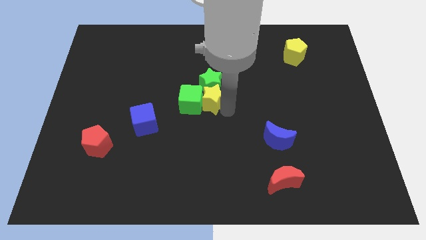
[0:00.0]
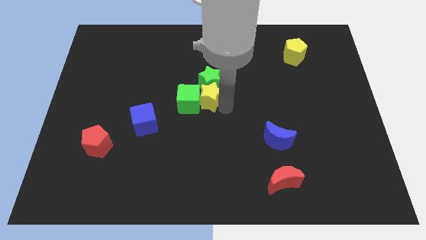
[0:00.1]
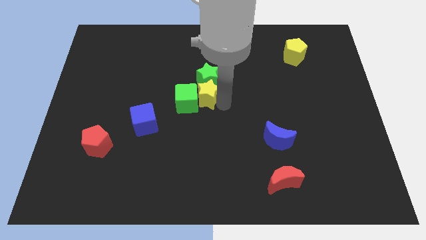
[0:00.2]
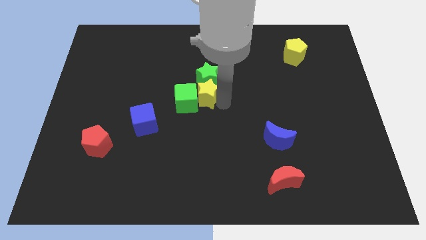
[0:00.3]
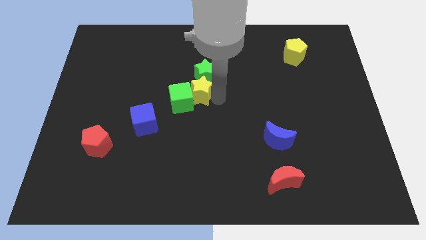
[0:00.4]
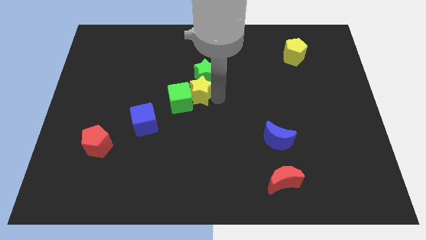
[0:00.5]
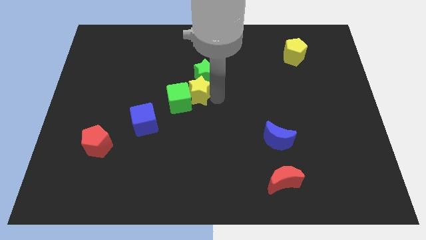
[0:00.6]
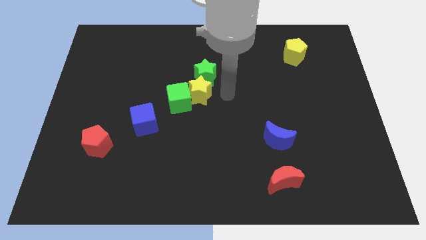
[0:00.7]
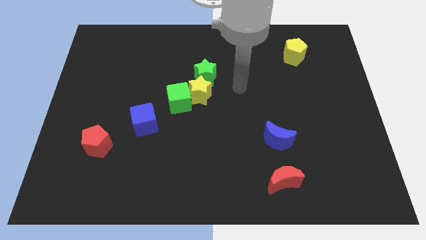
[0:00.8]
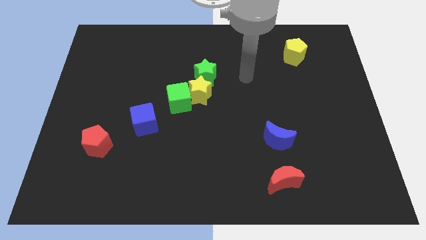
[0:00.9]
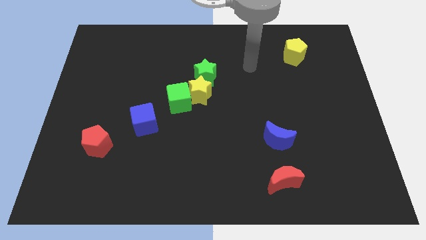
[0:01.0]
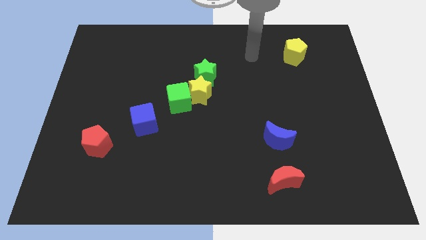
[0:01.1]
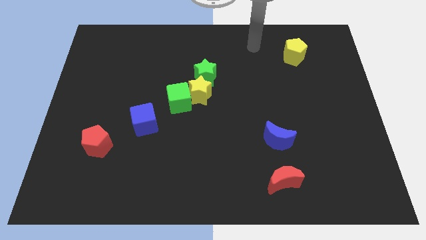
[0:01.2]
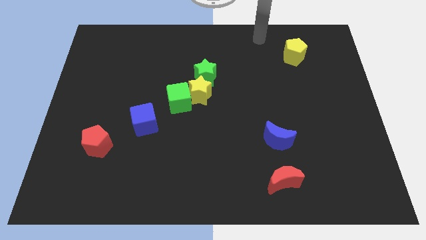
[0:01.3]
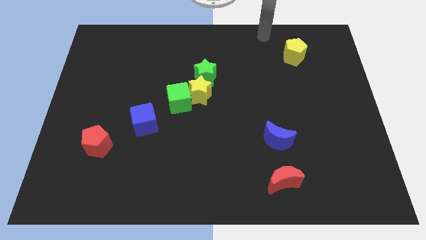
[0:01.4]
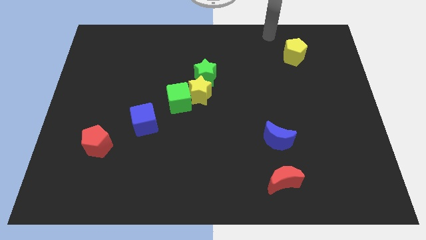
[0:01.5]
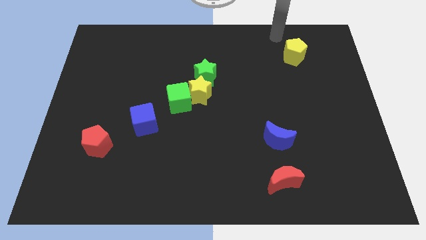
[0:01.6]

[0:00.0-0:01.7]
move your arm towards right

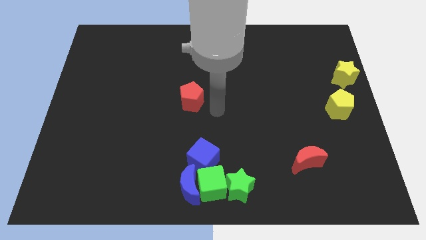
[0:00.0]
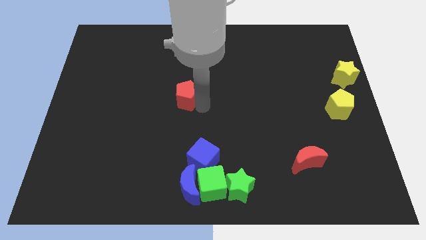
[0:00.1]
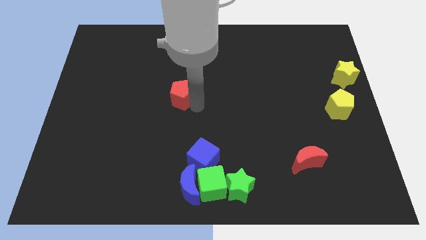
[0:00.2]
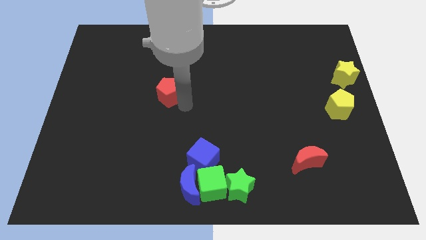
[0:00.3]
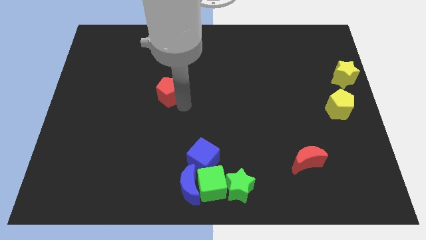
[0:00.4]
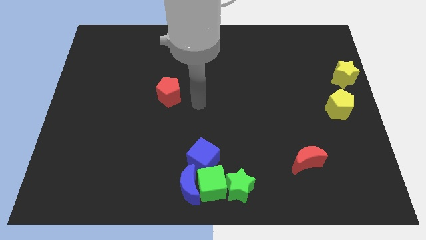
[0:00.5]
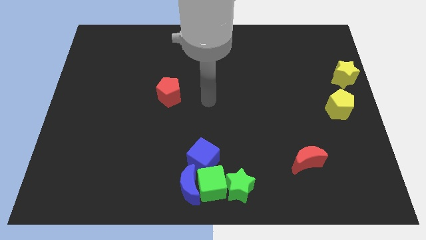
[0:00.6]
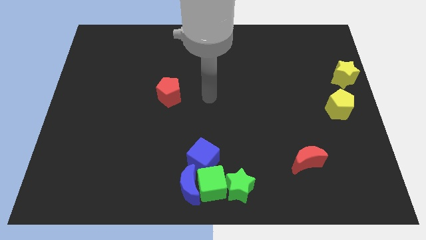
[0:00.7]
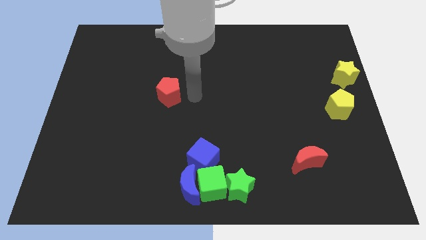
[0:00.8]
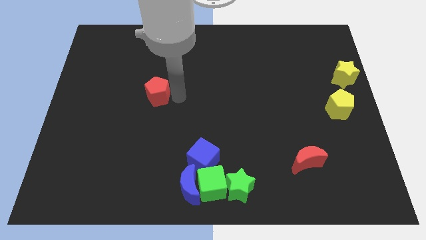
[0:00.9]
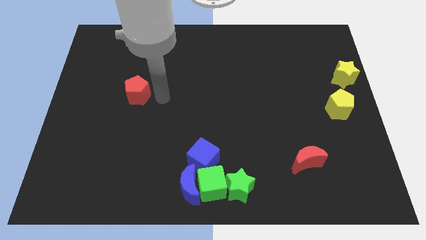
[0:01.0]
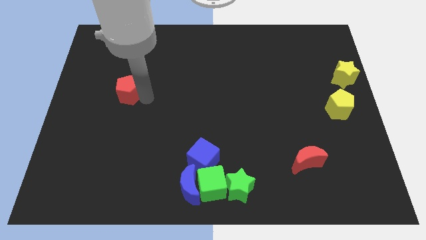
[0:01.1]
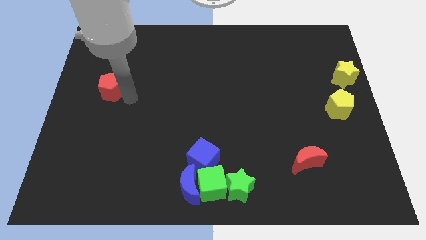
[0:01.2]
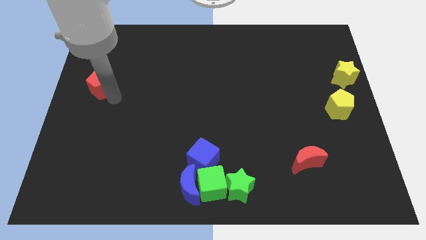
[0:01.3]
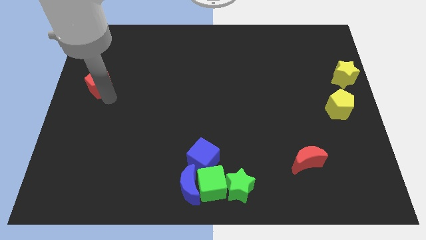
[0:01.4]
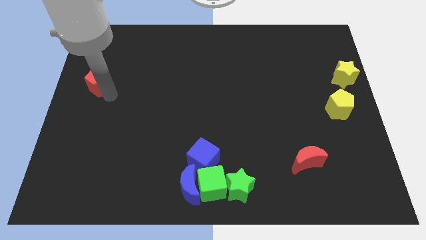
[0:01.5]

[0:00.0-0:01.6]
push the red pentagon to the left

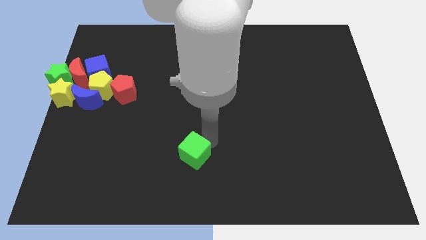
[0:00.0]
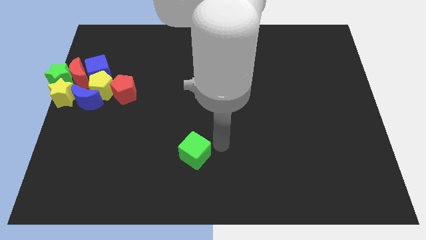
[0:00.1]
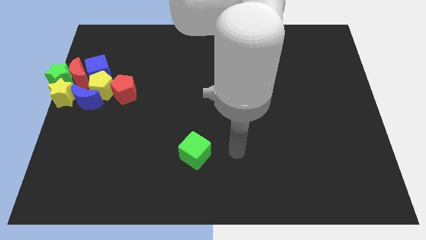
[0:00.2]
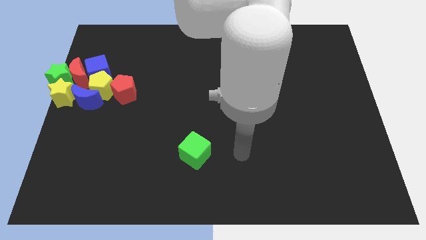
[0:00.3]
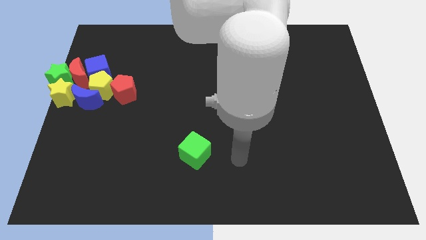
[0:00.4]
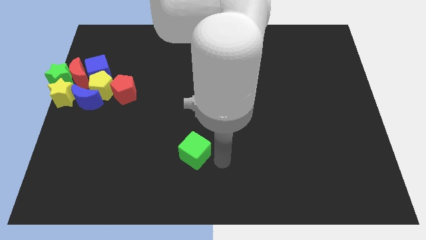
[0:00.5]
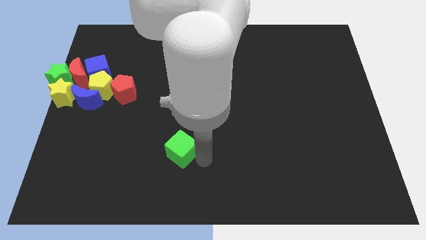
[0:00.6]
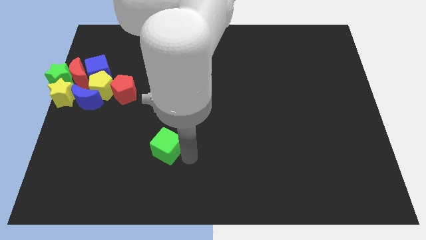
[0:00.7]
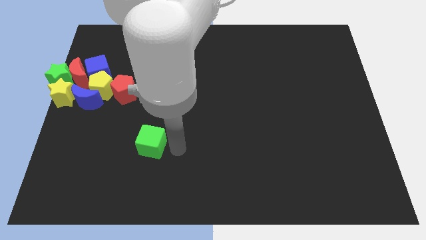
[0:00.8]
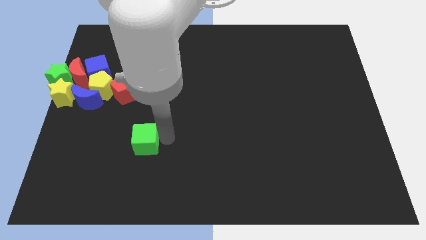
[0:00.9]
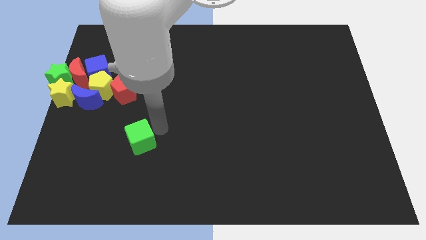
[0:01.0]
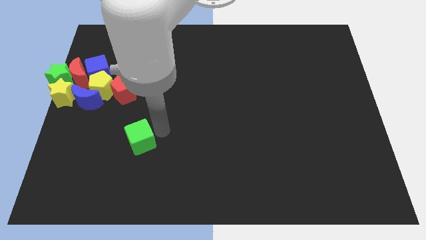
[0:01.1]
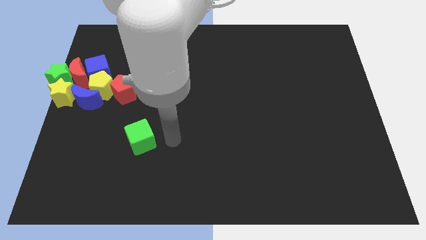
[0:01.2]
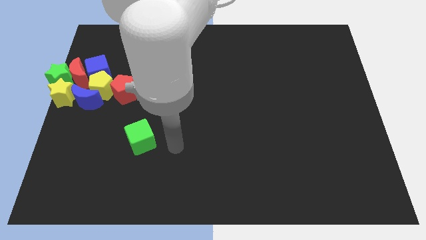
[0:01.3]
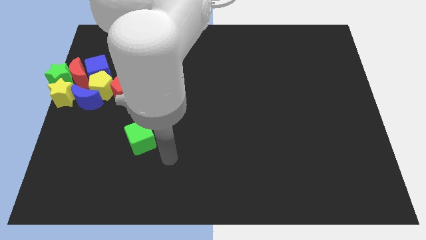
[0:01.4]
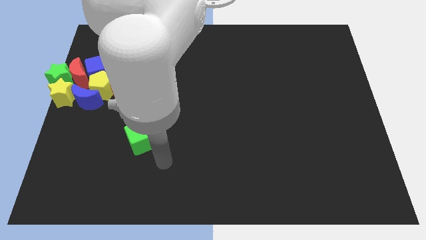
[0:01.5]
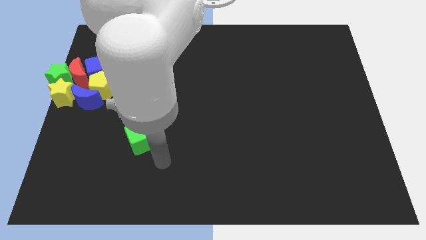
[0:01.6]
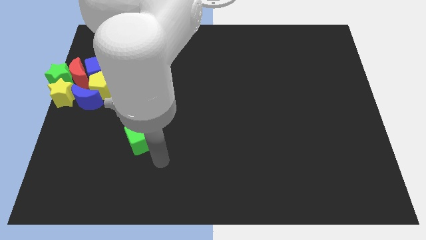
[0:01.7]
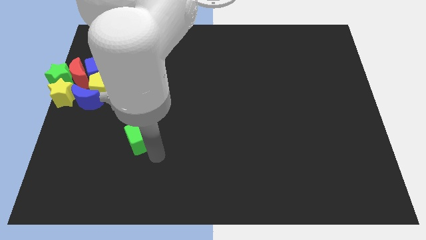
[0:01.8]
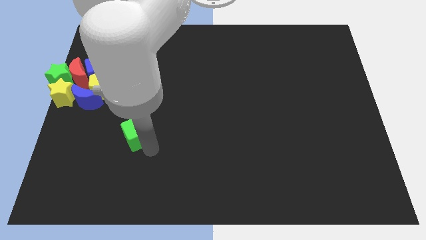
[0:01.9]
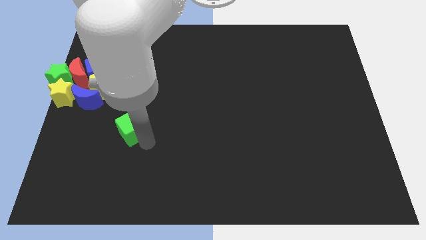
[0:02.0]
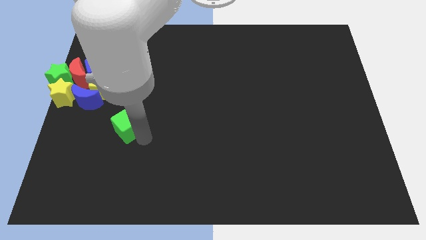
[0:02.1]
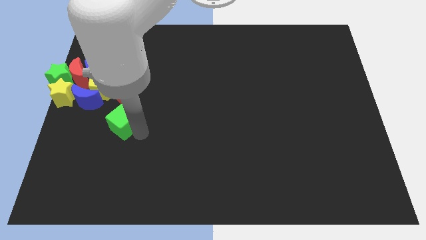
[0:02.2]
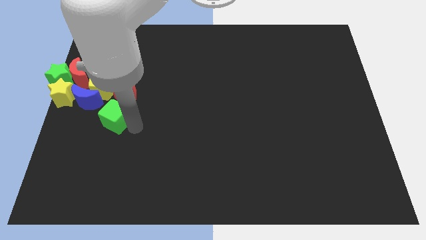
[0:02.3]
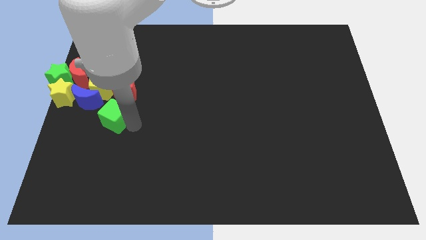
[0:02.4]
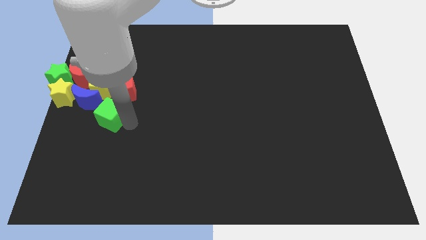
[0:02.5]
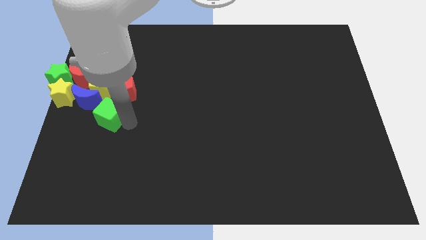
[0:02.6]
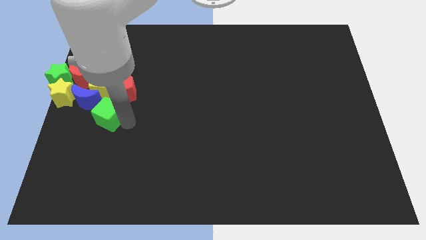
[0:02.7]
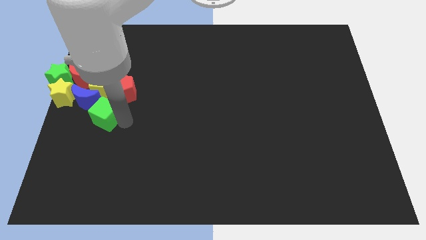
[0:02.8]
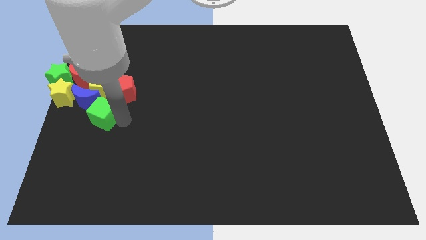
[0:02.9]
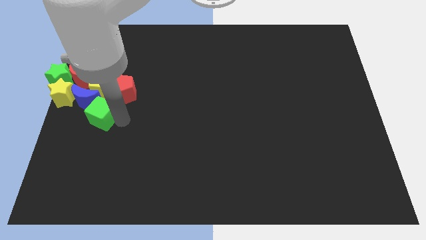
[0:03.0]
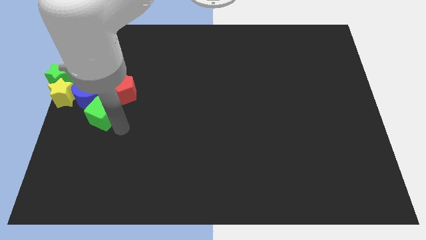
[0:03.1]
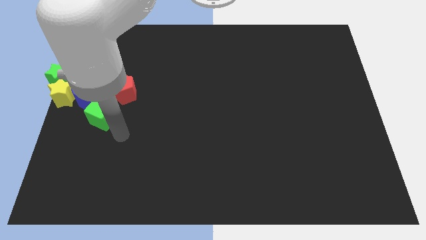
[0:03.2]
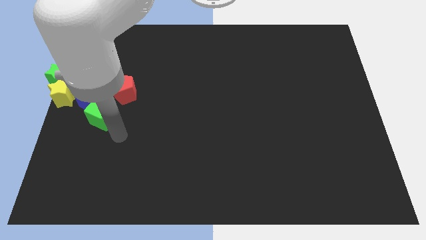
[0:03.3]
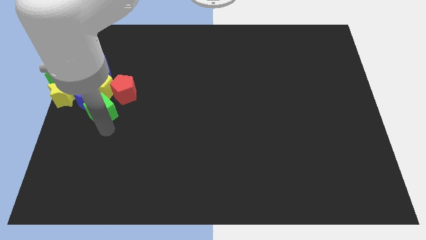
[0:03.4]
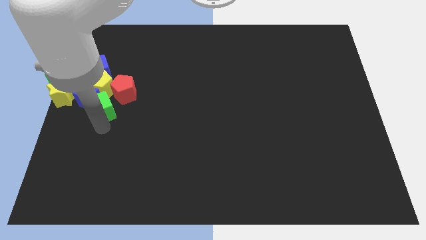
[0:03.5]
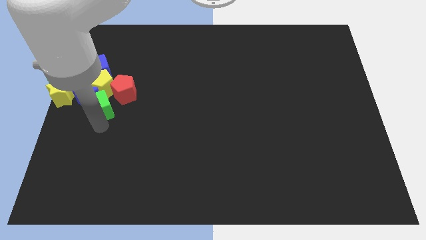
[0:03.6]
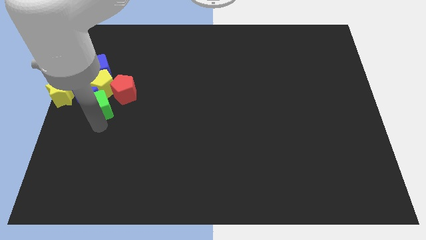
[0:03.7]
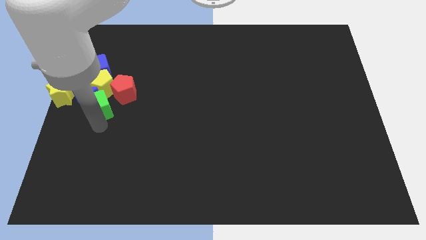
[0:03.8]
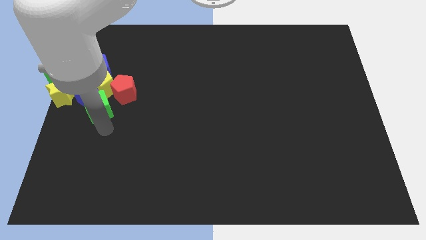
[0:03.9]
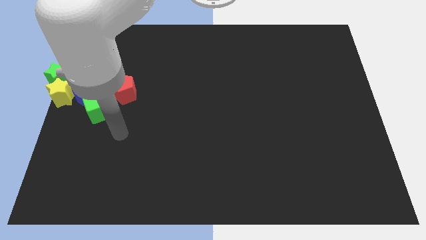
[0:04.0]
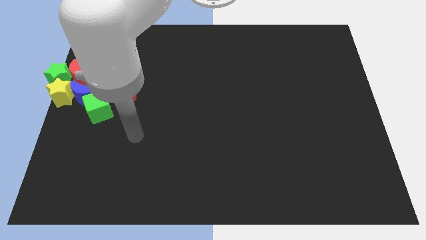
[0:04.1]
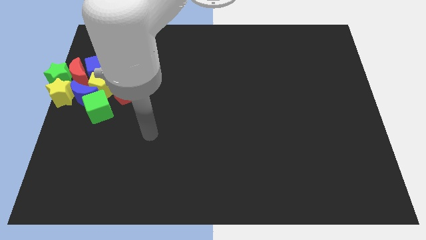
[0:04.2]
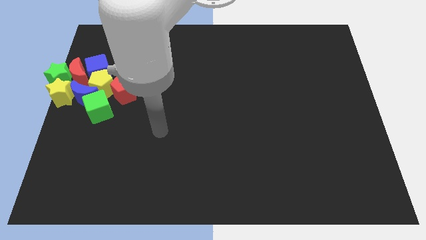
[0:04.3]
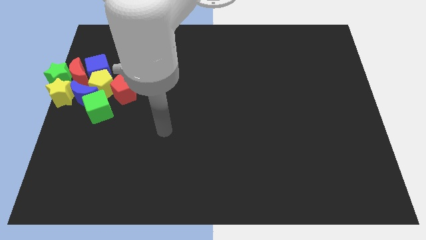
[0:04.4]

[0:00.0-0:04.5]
push the green cube into the blue crescent

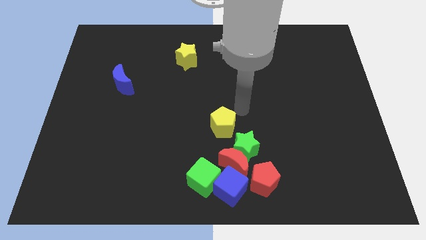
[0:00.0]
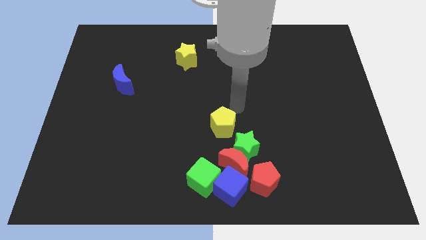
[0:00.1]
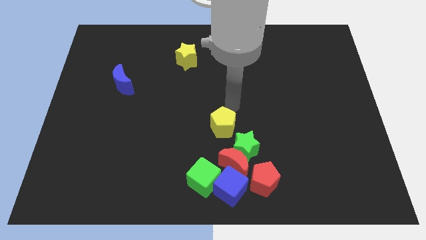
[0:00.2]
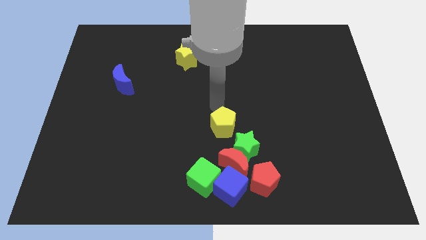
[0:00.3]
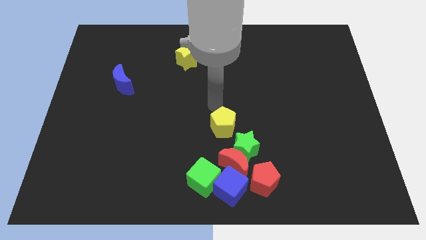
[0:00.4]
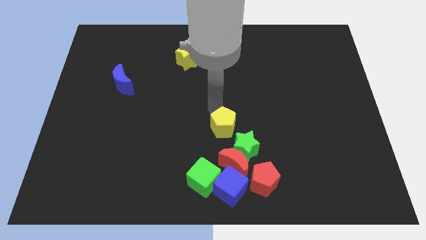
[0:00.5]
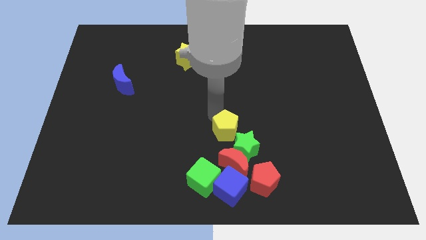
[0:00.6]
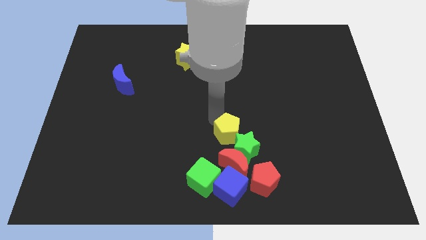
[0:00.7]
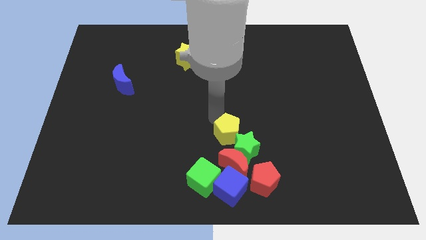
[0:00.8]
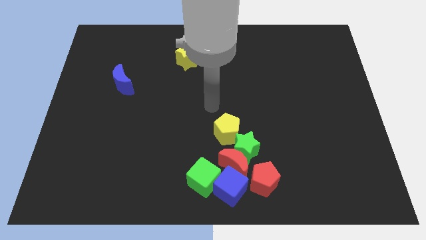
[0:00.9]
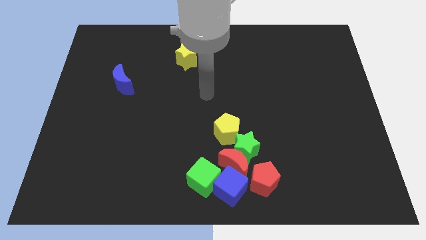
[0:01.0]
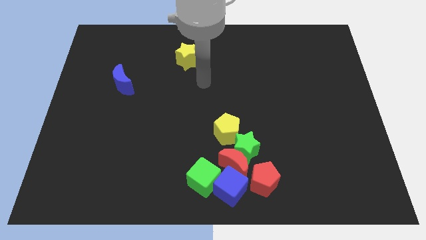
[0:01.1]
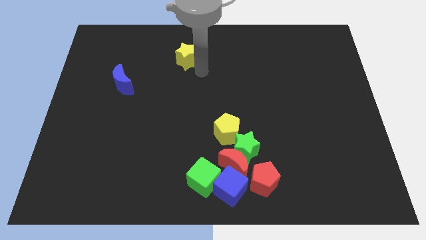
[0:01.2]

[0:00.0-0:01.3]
push the yellow pentagon into the green star
